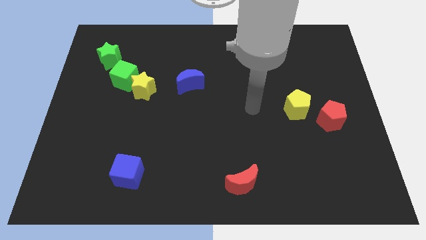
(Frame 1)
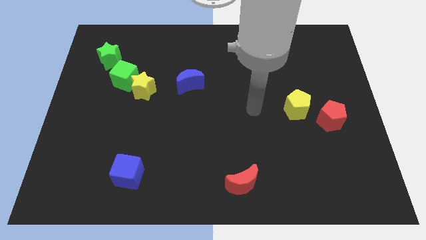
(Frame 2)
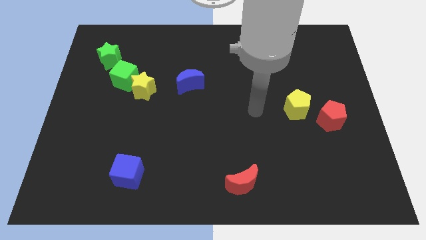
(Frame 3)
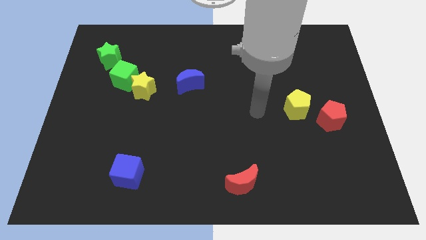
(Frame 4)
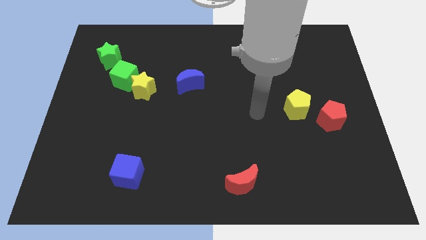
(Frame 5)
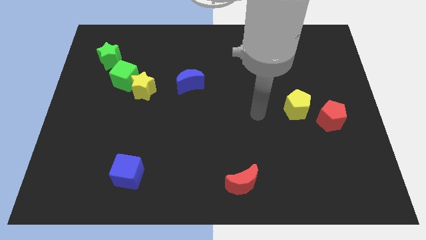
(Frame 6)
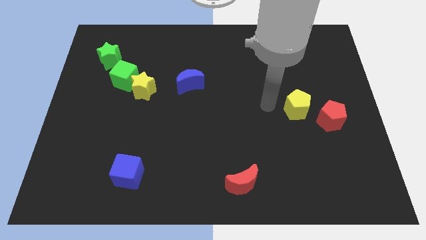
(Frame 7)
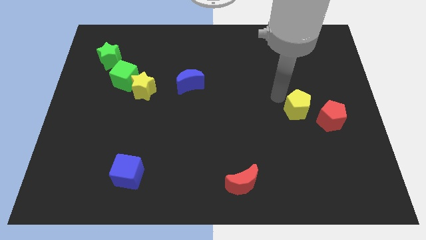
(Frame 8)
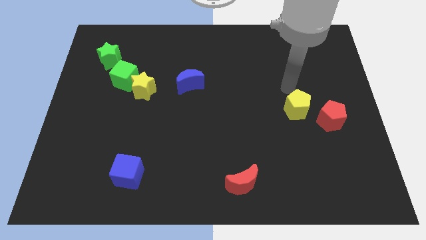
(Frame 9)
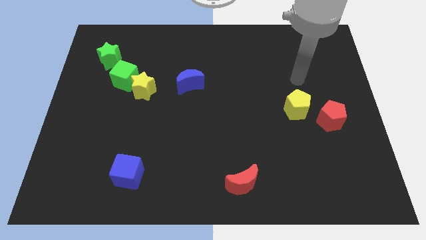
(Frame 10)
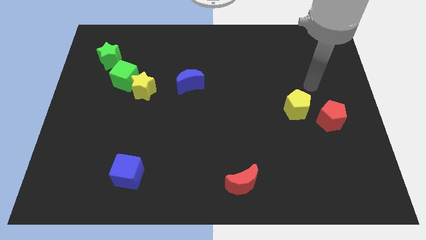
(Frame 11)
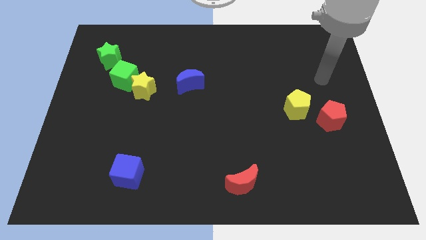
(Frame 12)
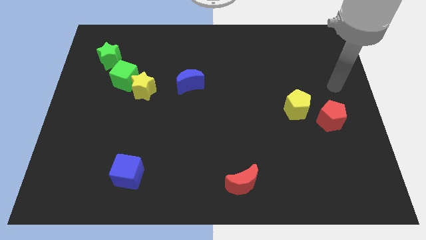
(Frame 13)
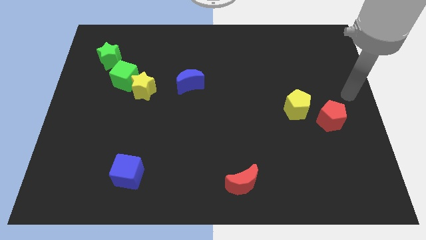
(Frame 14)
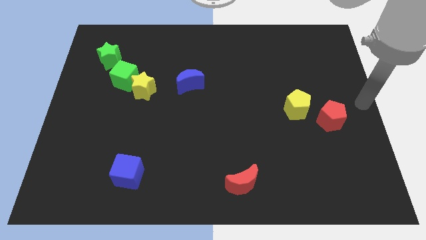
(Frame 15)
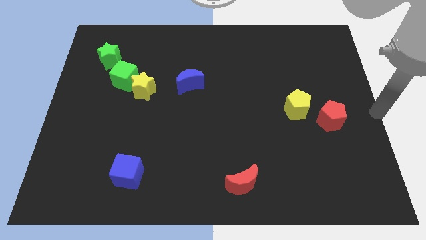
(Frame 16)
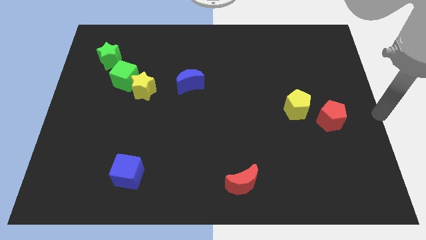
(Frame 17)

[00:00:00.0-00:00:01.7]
move your arm to the right center of the board

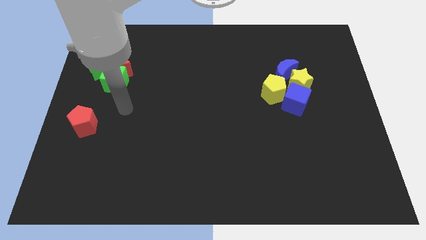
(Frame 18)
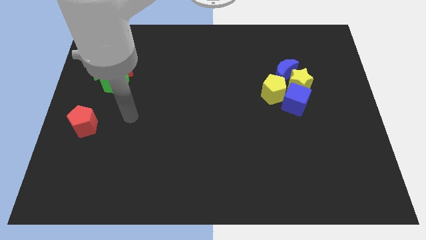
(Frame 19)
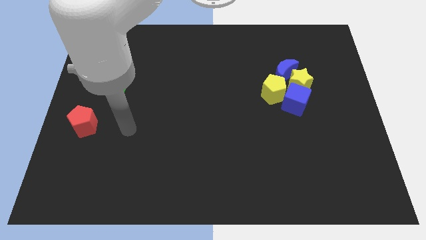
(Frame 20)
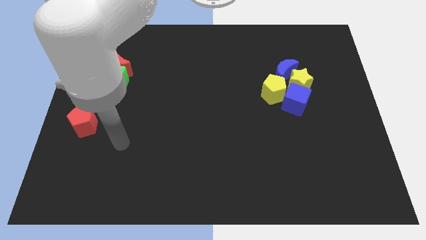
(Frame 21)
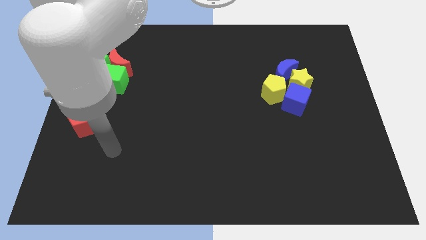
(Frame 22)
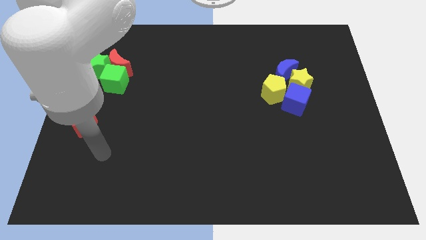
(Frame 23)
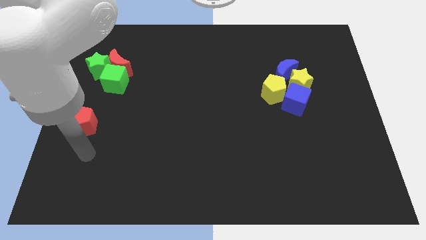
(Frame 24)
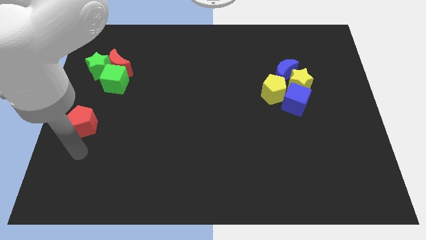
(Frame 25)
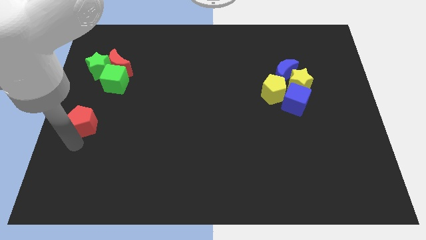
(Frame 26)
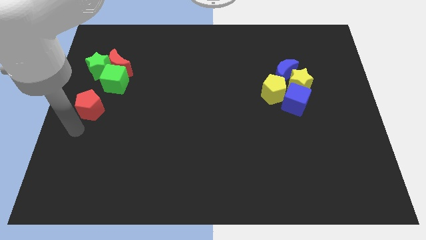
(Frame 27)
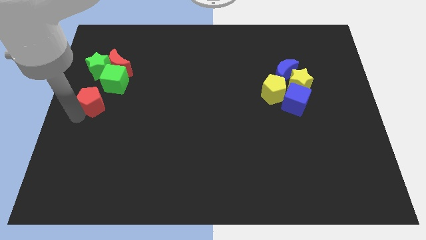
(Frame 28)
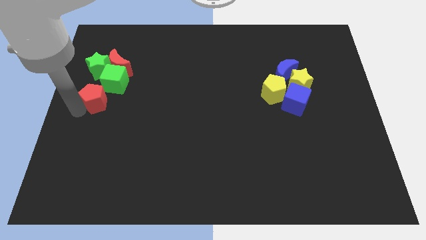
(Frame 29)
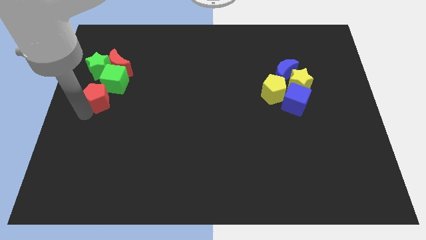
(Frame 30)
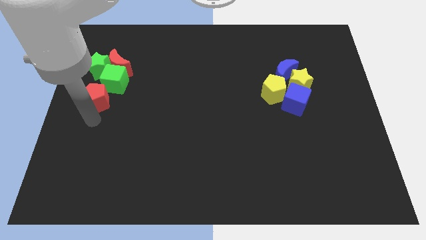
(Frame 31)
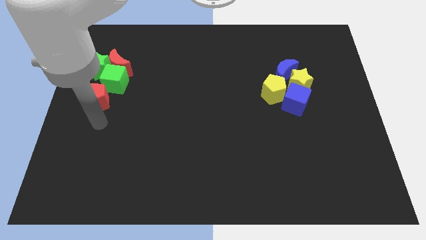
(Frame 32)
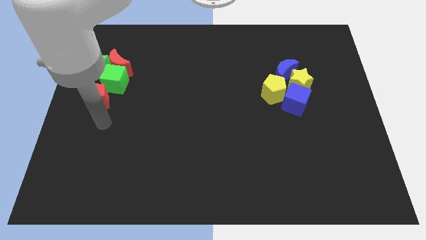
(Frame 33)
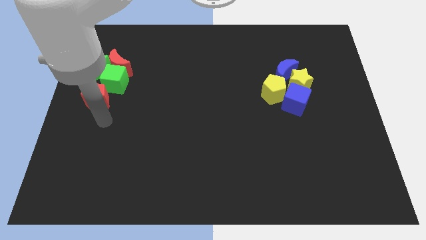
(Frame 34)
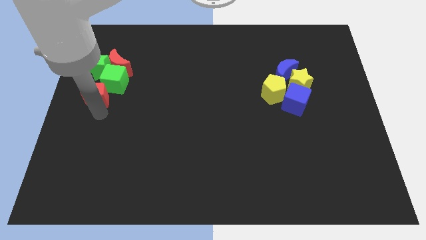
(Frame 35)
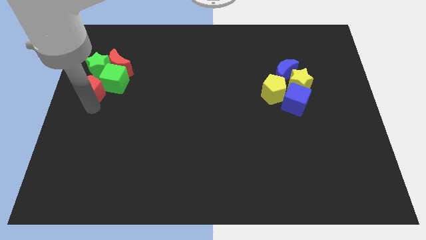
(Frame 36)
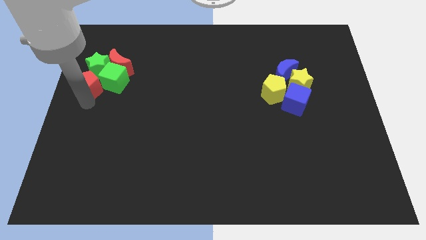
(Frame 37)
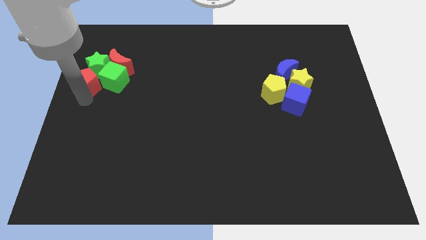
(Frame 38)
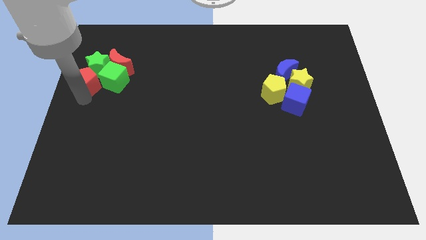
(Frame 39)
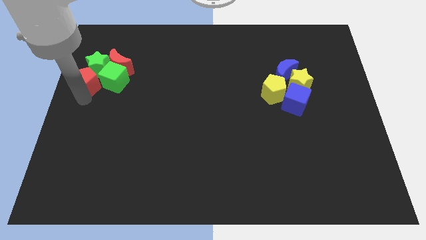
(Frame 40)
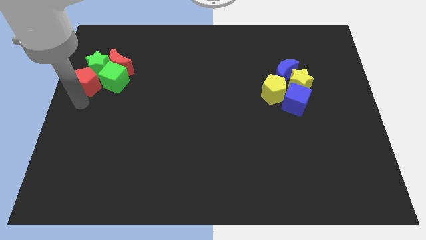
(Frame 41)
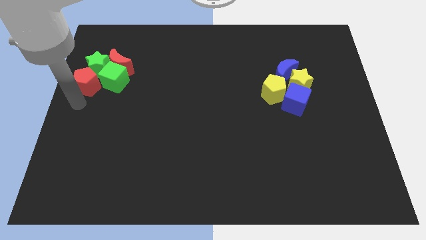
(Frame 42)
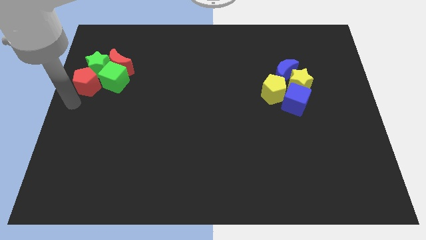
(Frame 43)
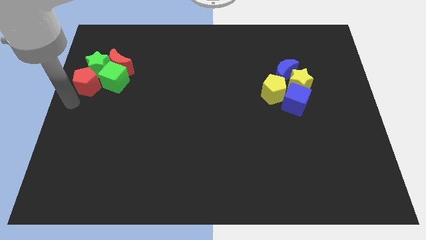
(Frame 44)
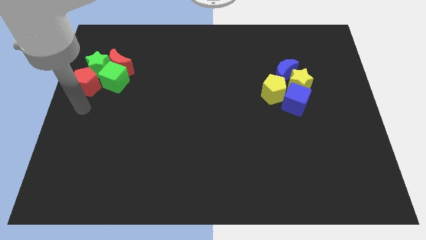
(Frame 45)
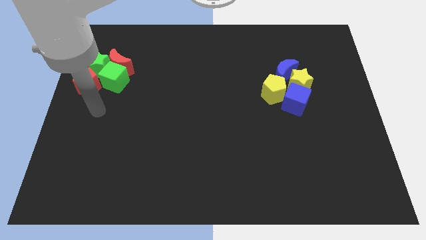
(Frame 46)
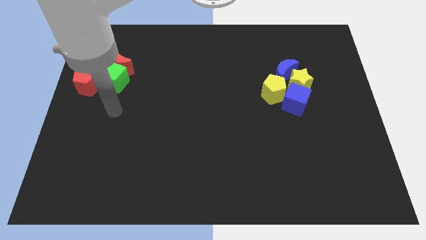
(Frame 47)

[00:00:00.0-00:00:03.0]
push the red pentagon into the green cube and green star

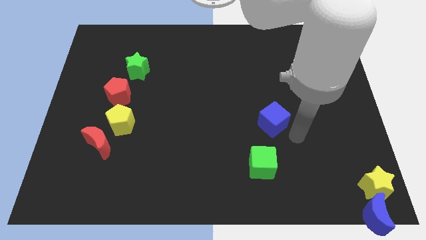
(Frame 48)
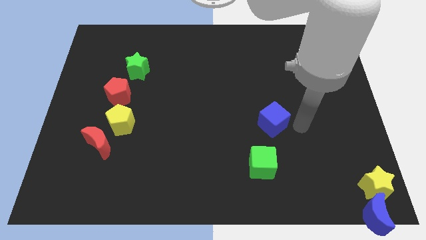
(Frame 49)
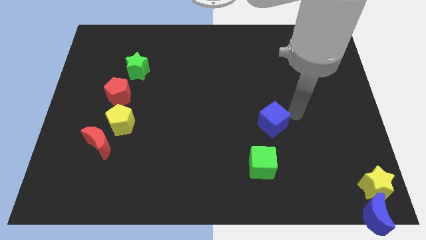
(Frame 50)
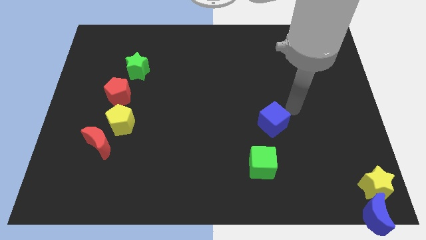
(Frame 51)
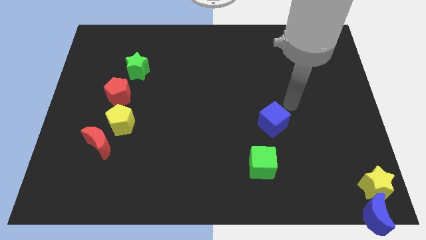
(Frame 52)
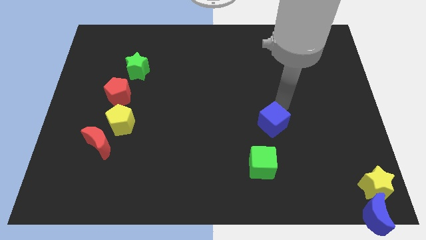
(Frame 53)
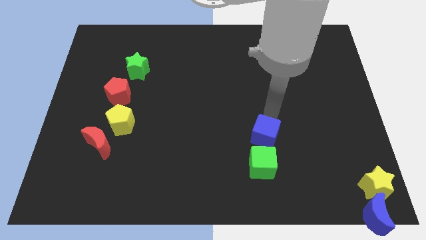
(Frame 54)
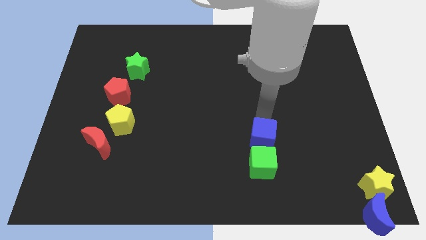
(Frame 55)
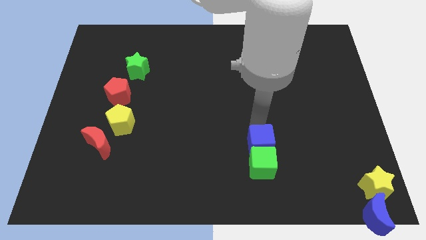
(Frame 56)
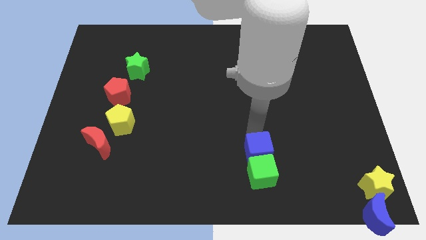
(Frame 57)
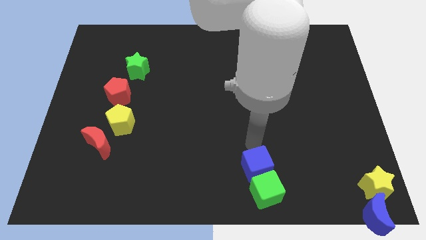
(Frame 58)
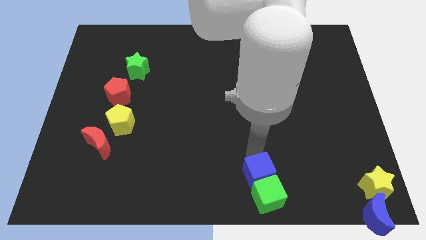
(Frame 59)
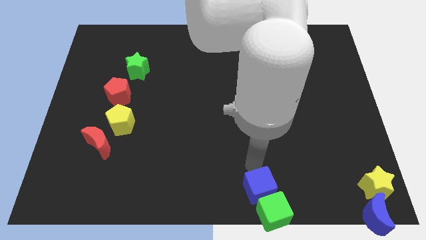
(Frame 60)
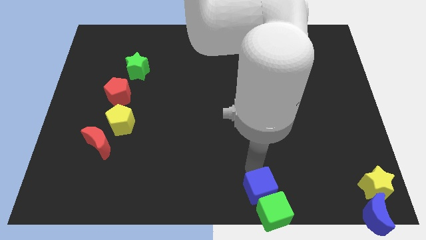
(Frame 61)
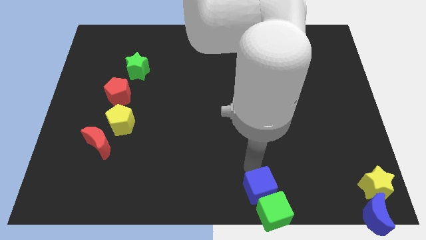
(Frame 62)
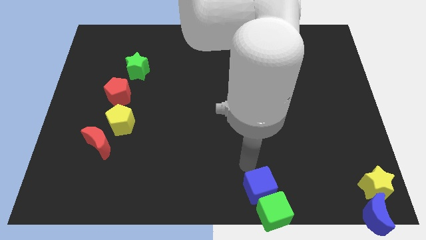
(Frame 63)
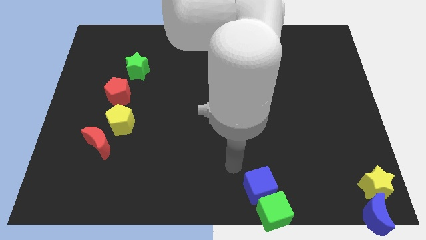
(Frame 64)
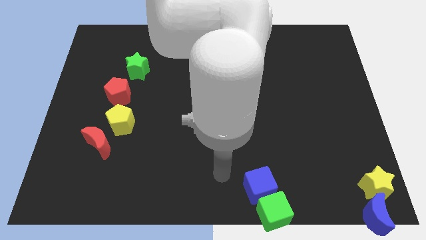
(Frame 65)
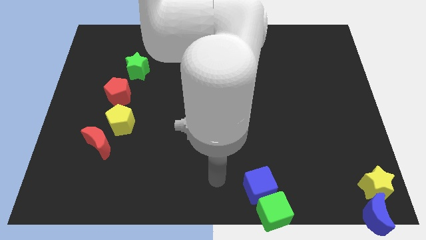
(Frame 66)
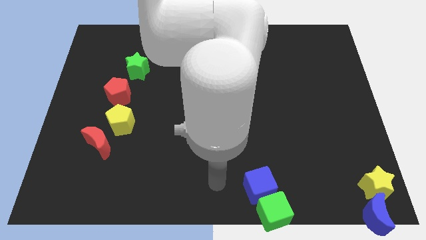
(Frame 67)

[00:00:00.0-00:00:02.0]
slide the blue cube into the green cube

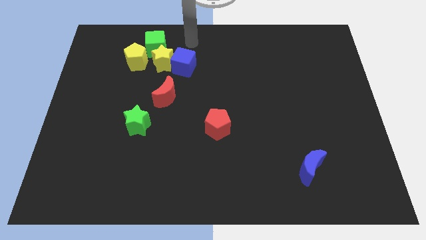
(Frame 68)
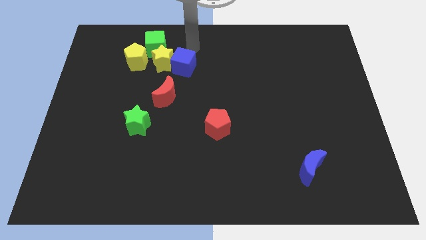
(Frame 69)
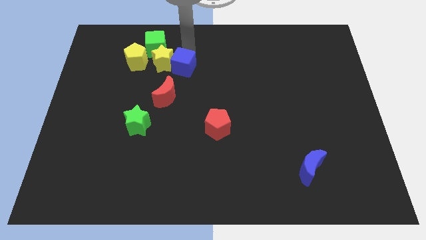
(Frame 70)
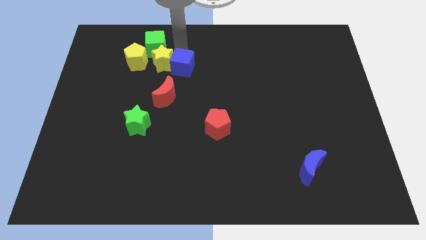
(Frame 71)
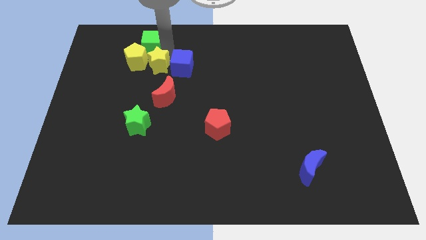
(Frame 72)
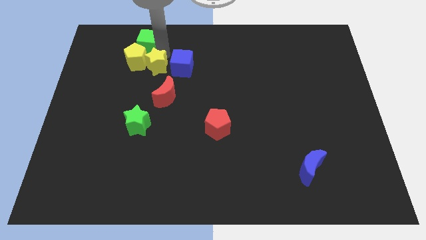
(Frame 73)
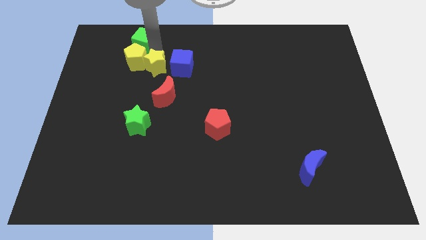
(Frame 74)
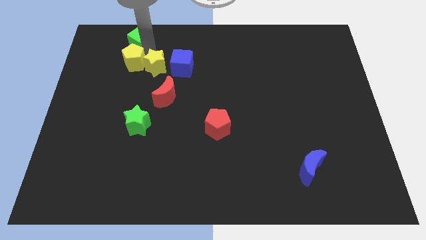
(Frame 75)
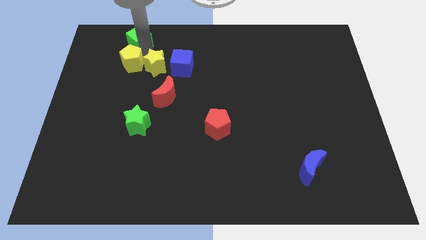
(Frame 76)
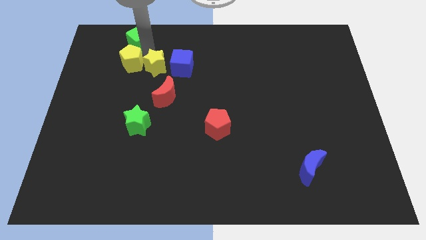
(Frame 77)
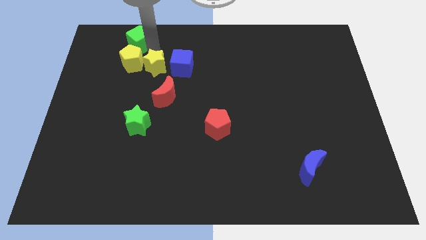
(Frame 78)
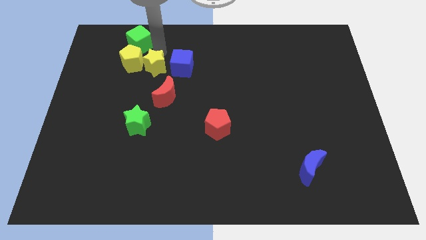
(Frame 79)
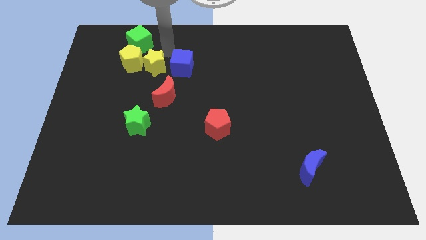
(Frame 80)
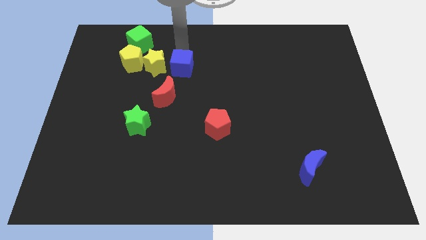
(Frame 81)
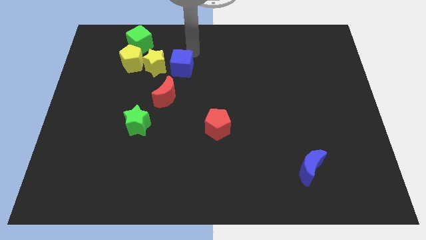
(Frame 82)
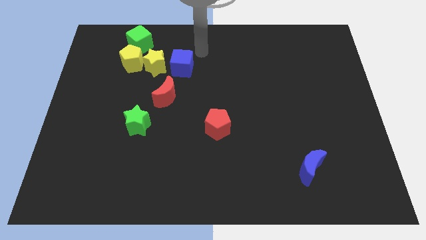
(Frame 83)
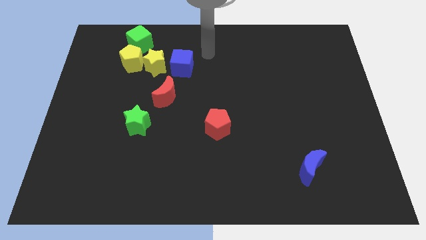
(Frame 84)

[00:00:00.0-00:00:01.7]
separate blue cube and yellow star

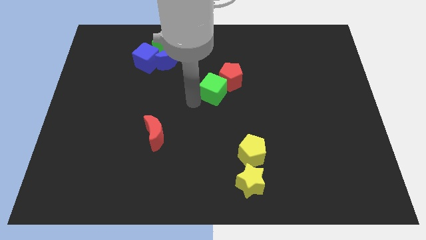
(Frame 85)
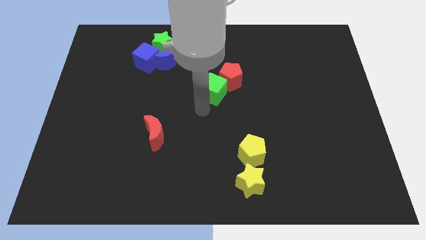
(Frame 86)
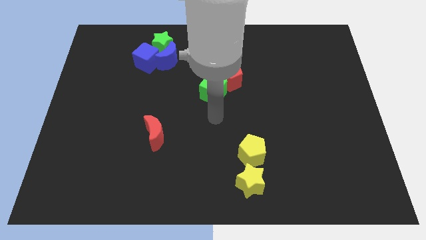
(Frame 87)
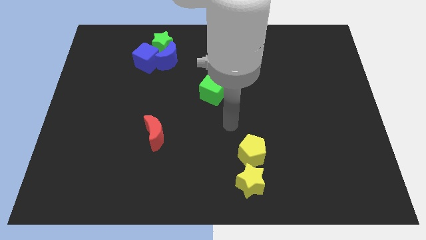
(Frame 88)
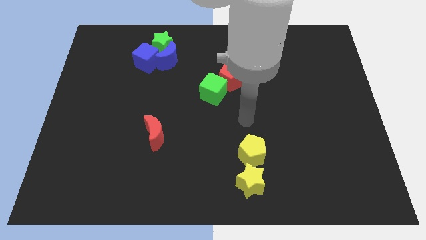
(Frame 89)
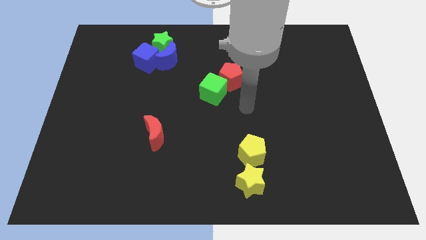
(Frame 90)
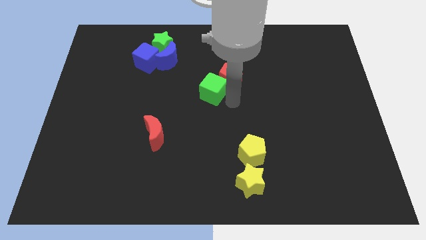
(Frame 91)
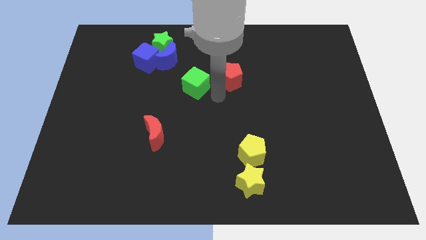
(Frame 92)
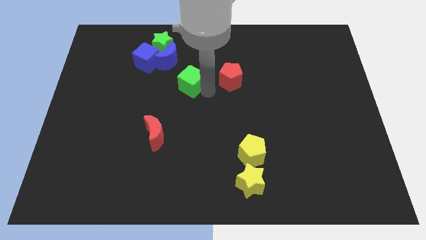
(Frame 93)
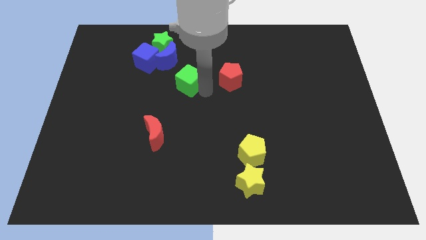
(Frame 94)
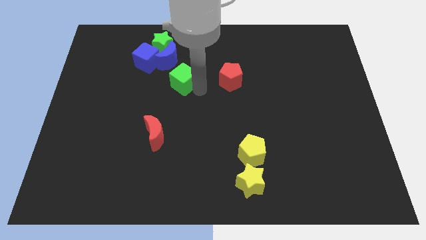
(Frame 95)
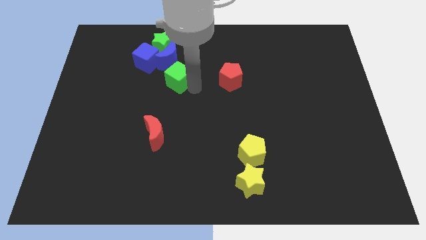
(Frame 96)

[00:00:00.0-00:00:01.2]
separate the green cube from the red pentagon
